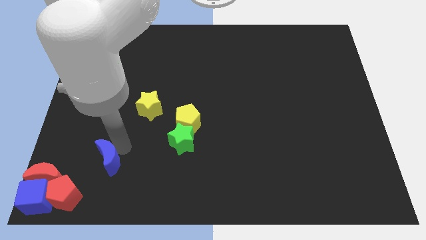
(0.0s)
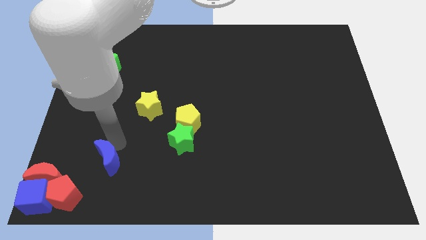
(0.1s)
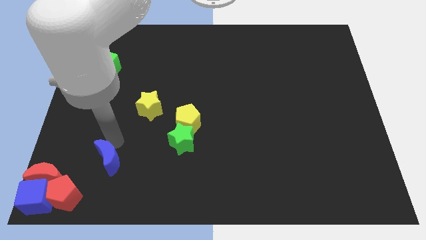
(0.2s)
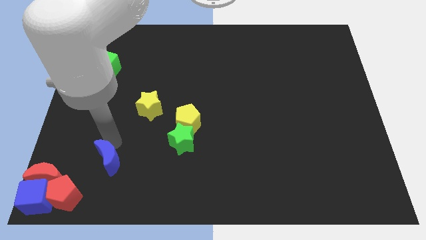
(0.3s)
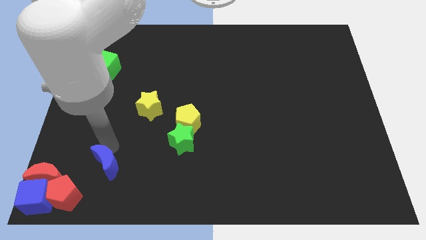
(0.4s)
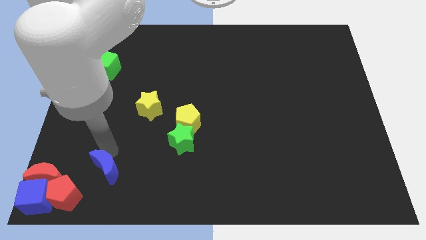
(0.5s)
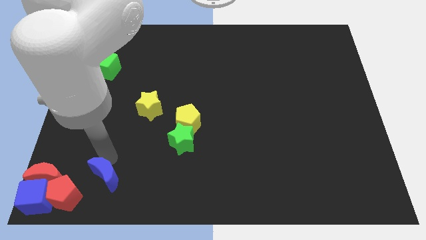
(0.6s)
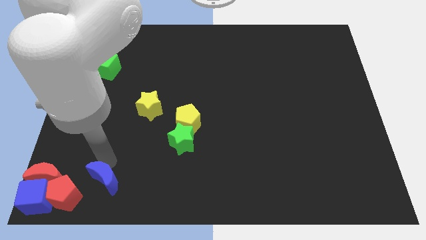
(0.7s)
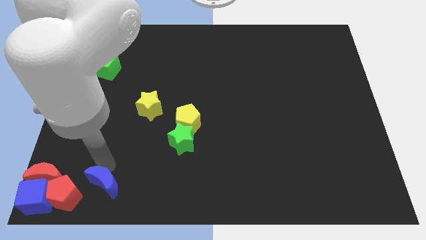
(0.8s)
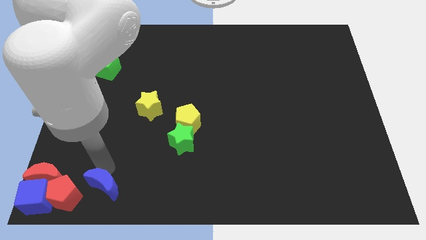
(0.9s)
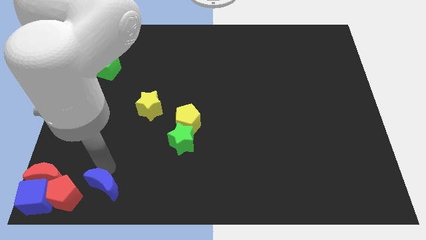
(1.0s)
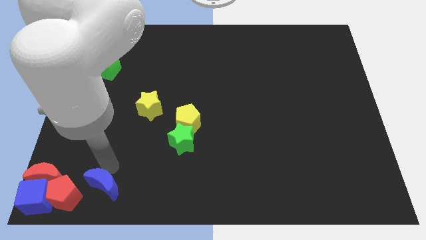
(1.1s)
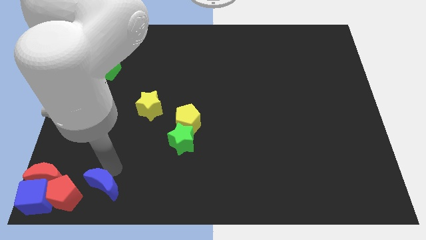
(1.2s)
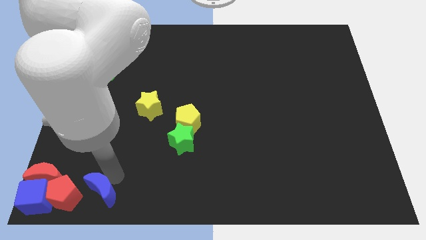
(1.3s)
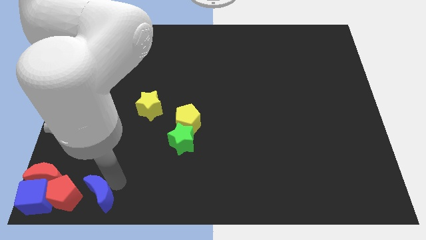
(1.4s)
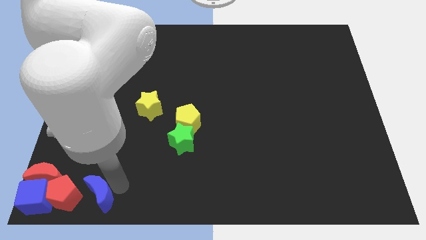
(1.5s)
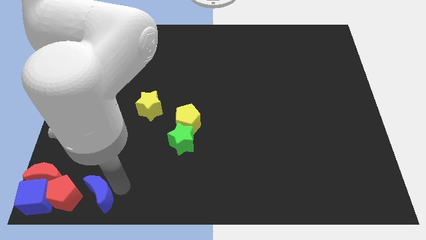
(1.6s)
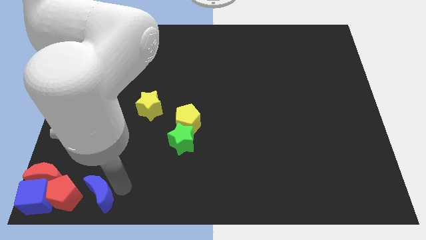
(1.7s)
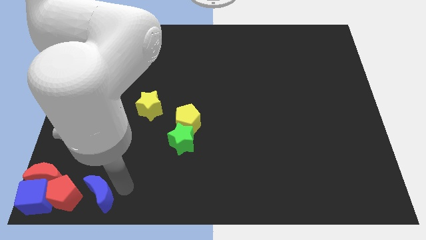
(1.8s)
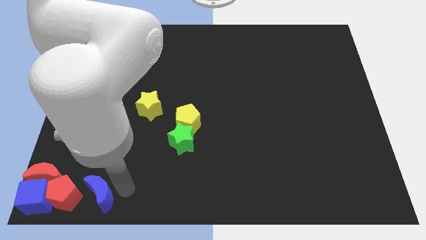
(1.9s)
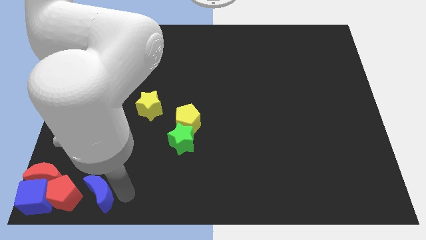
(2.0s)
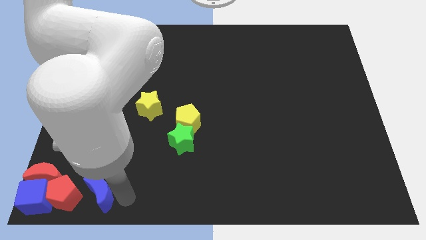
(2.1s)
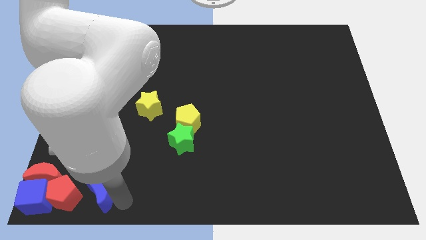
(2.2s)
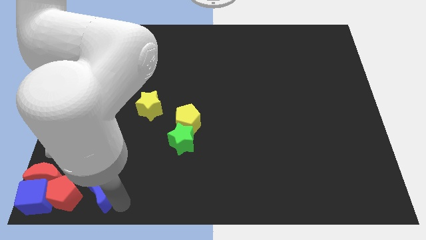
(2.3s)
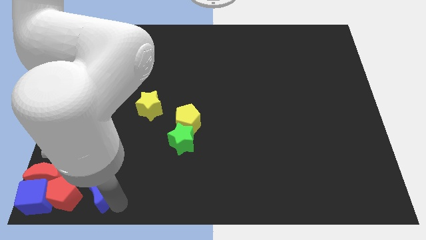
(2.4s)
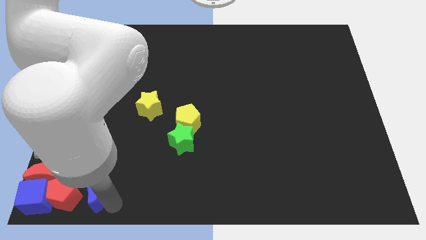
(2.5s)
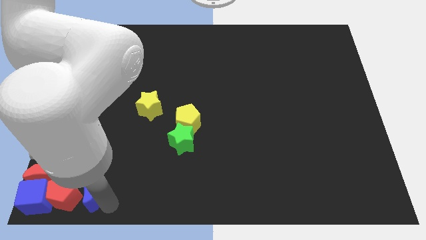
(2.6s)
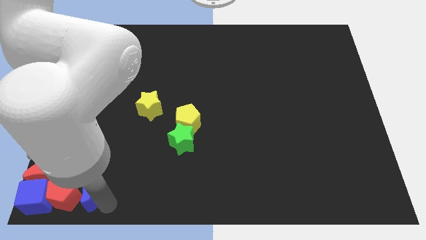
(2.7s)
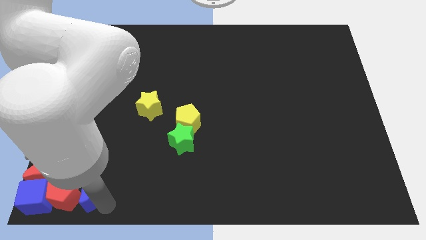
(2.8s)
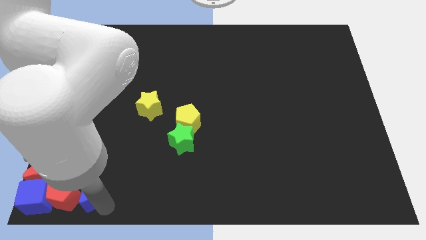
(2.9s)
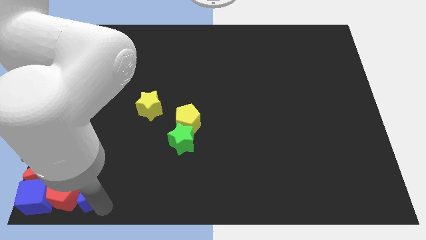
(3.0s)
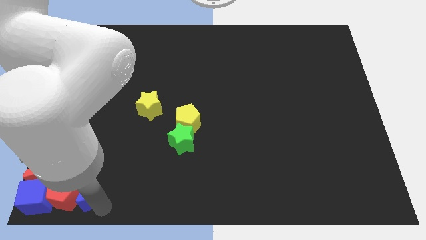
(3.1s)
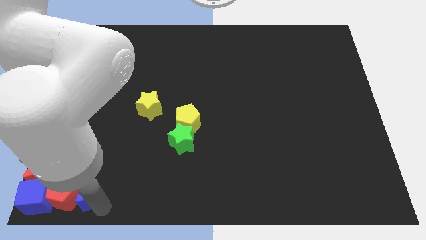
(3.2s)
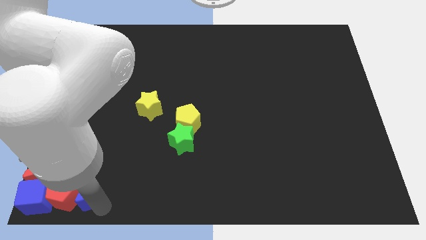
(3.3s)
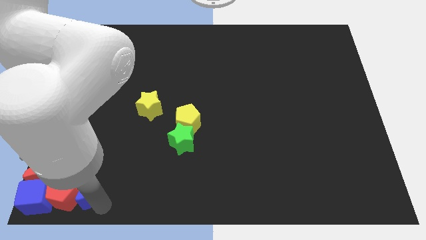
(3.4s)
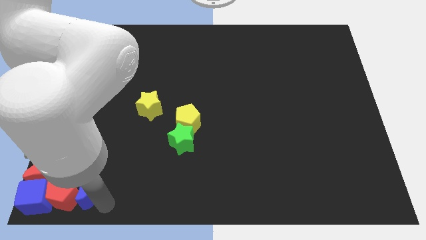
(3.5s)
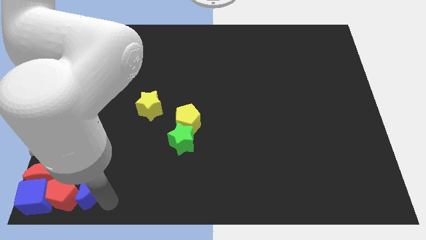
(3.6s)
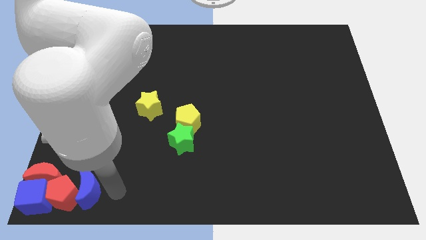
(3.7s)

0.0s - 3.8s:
move blue crescent right to the red pentagon

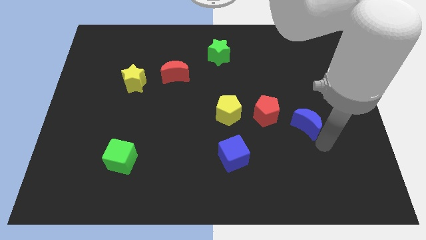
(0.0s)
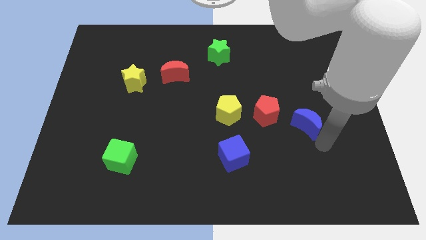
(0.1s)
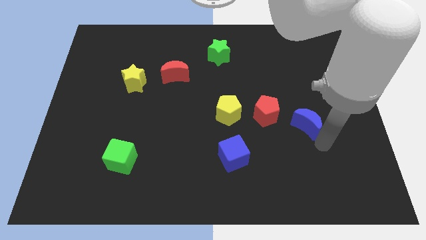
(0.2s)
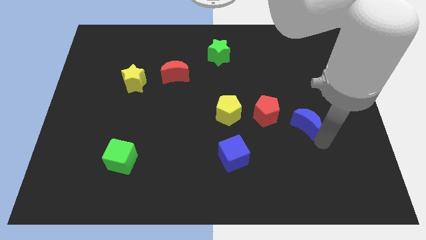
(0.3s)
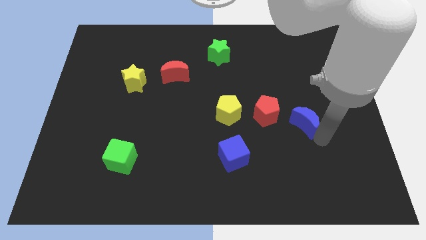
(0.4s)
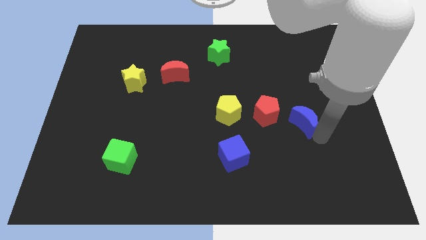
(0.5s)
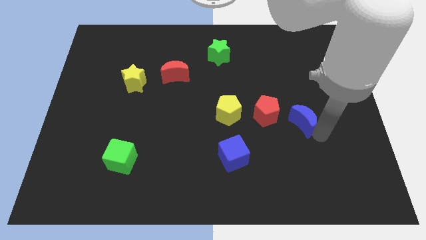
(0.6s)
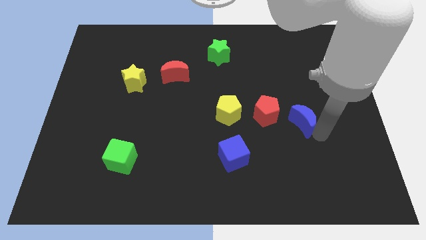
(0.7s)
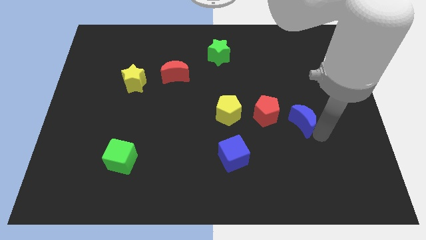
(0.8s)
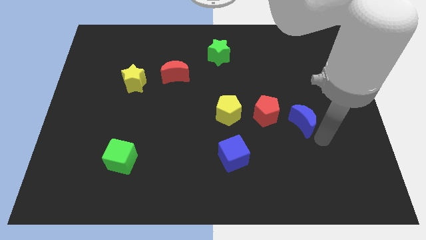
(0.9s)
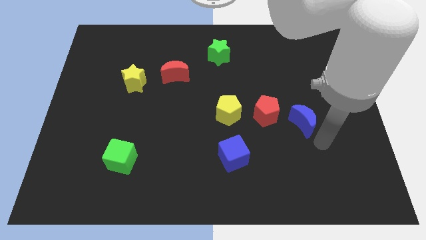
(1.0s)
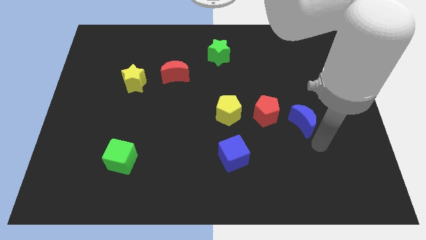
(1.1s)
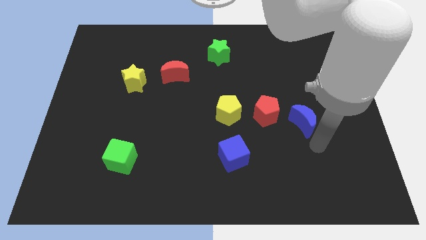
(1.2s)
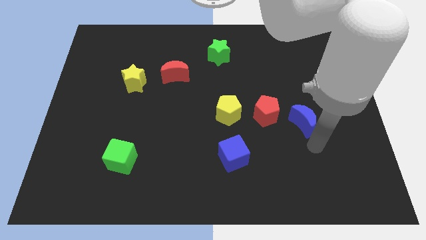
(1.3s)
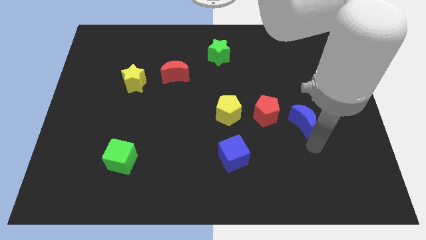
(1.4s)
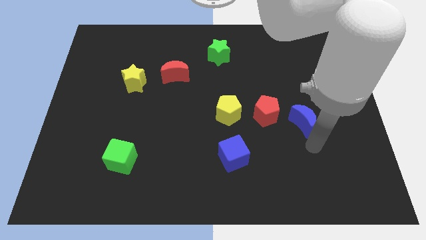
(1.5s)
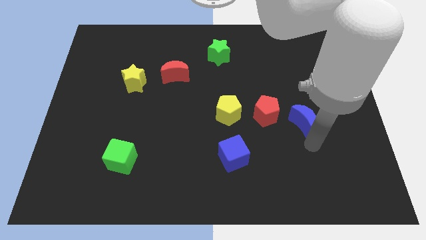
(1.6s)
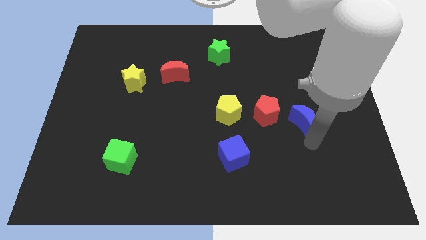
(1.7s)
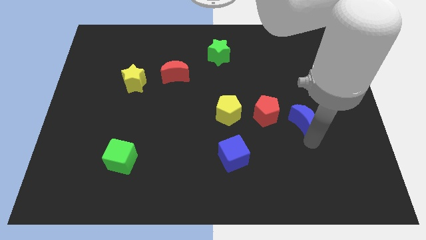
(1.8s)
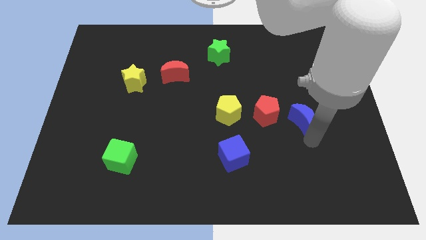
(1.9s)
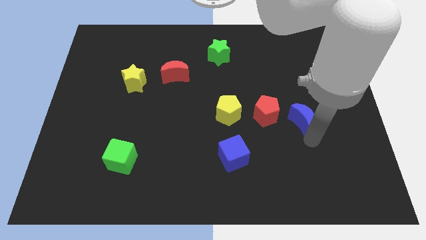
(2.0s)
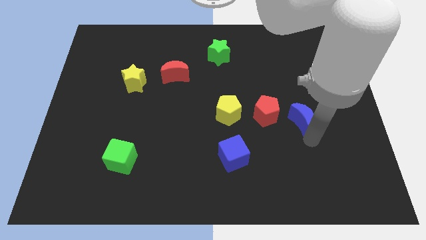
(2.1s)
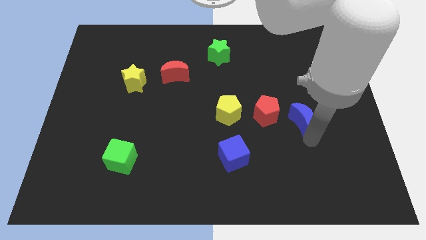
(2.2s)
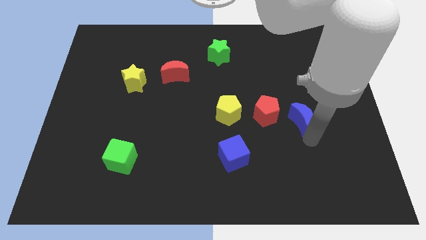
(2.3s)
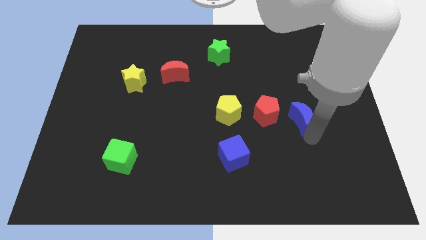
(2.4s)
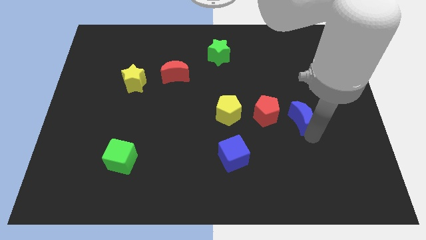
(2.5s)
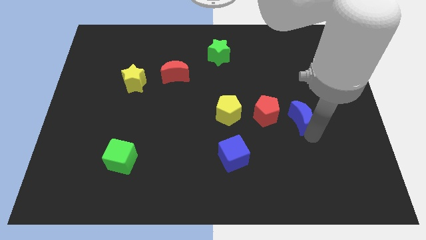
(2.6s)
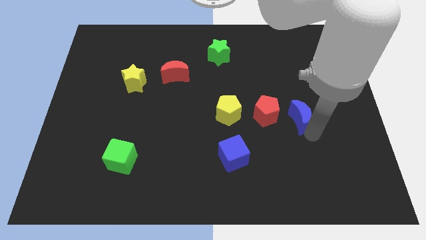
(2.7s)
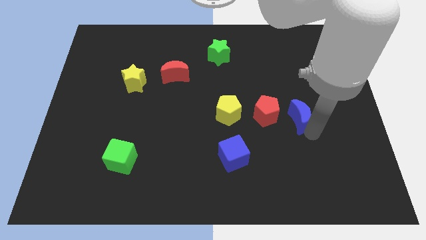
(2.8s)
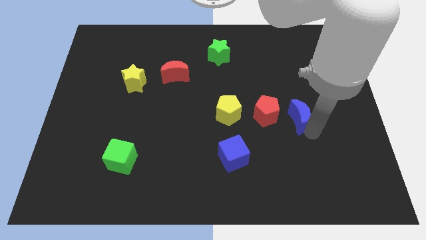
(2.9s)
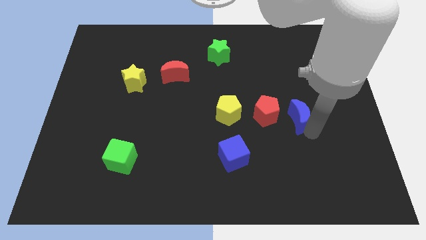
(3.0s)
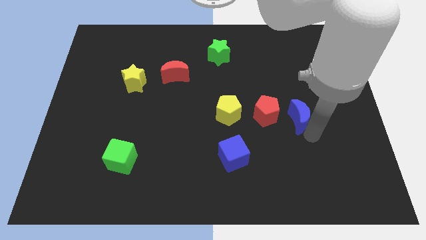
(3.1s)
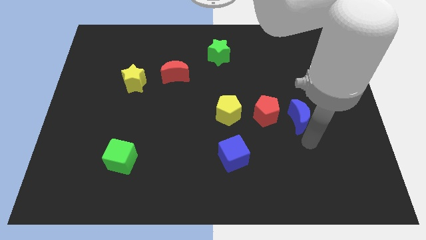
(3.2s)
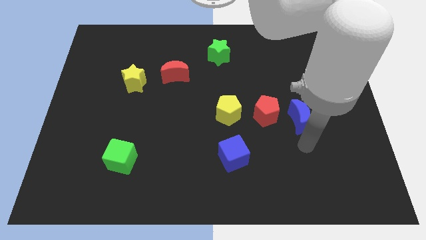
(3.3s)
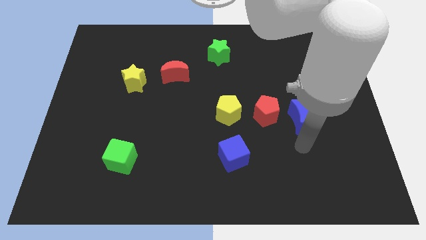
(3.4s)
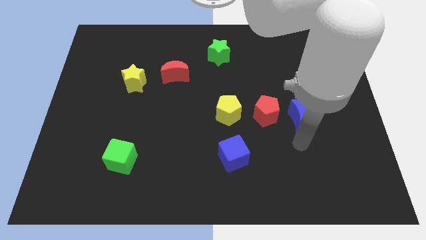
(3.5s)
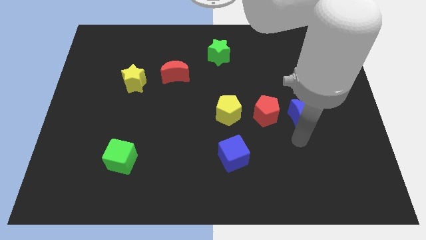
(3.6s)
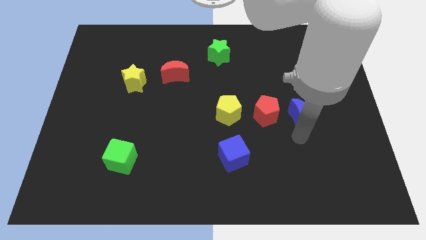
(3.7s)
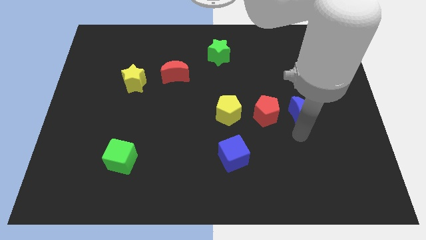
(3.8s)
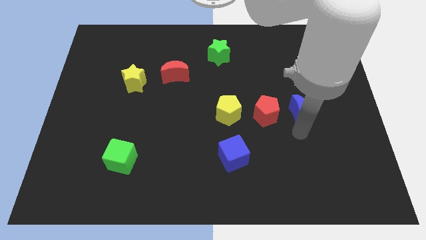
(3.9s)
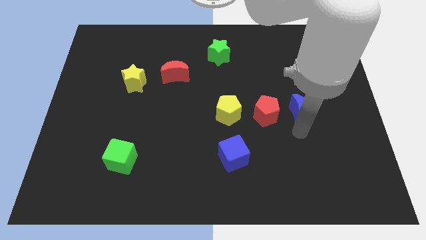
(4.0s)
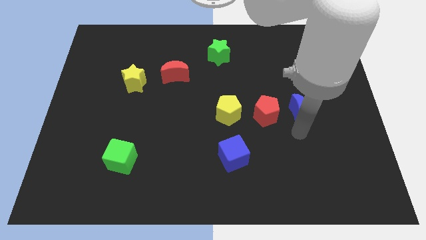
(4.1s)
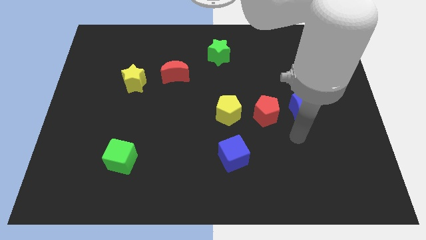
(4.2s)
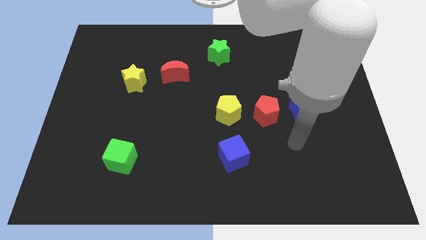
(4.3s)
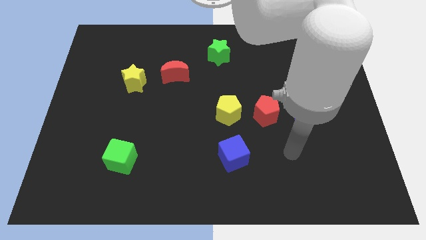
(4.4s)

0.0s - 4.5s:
move blue crescent towards the red pentagon

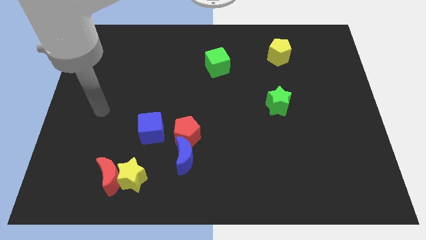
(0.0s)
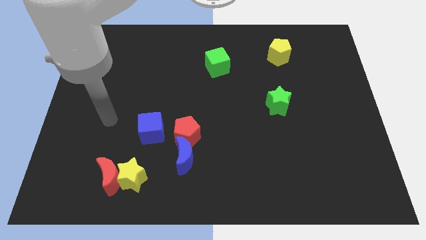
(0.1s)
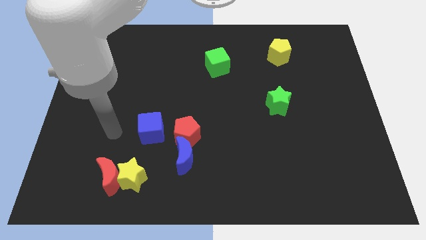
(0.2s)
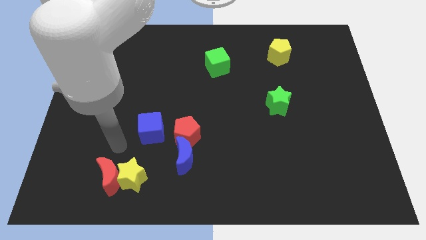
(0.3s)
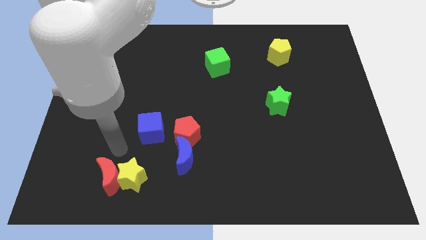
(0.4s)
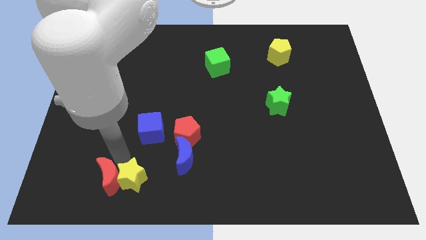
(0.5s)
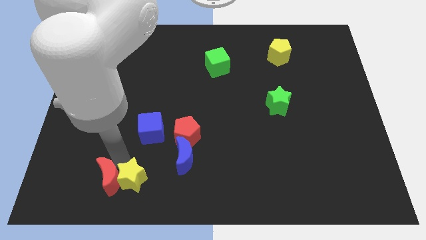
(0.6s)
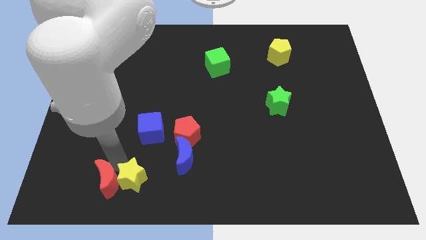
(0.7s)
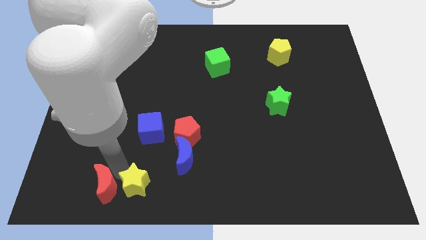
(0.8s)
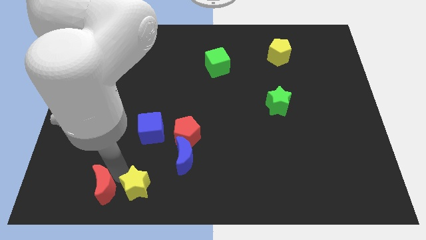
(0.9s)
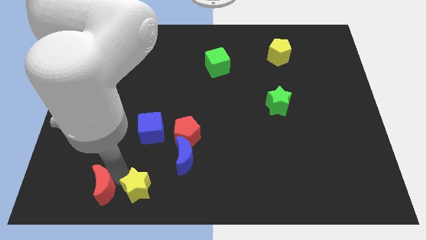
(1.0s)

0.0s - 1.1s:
place your arm in between yellow star and red moon
